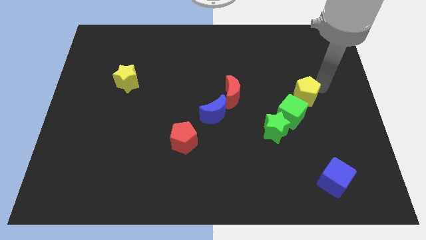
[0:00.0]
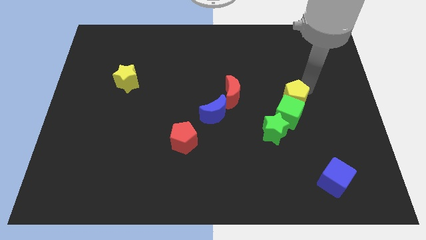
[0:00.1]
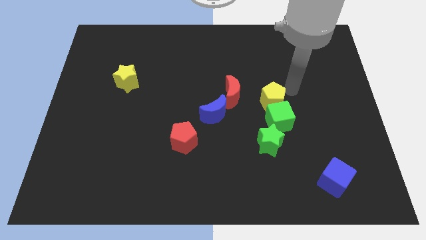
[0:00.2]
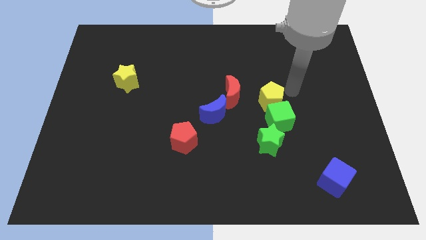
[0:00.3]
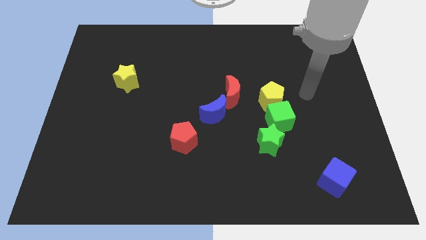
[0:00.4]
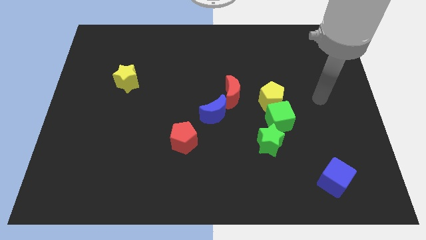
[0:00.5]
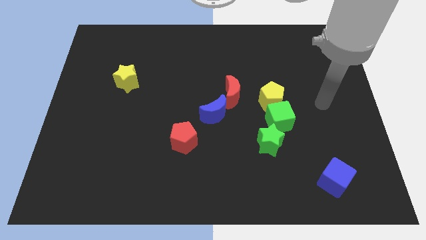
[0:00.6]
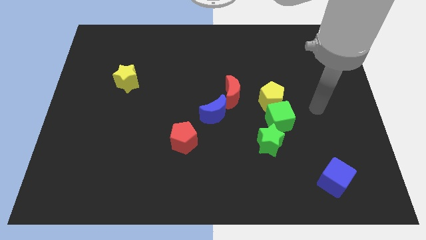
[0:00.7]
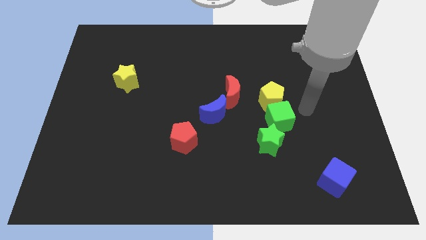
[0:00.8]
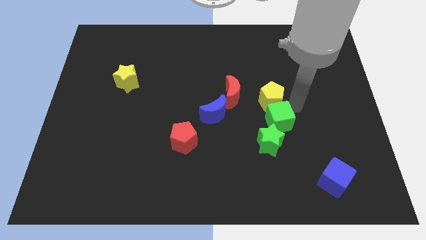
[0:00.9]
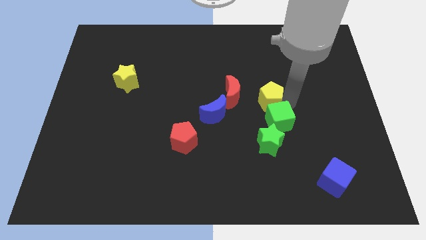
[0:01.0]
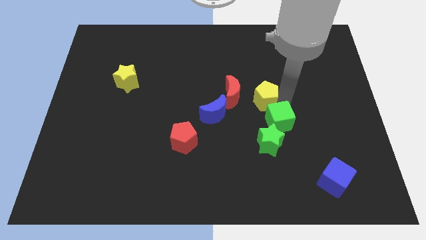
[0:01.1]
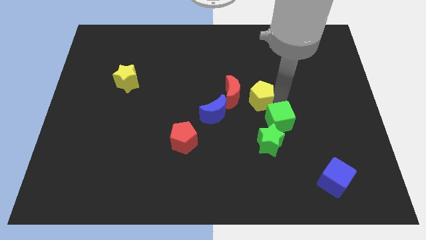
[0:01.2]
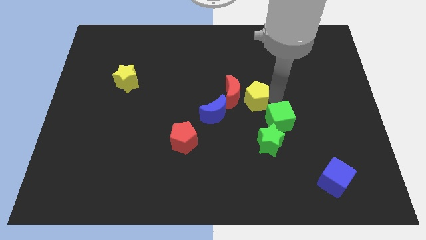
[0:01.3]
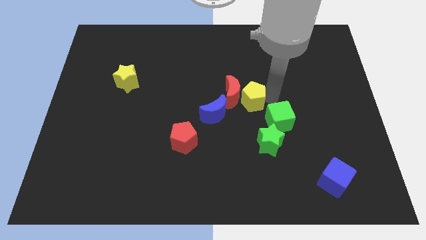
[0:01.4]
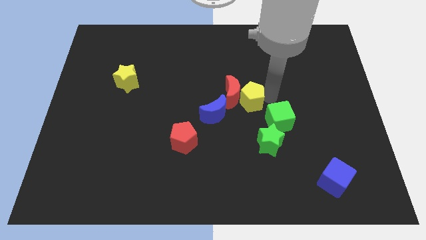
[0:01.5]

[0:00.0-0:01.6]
push the yellow pentagon to the right of the red crescent

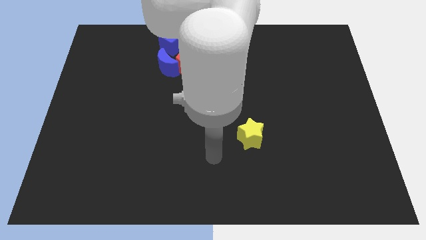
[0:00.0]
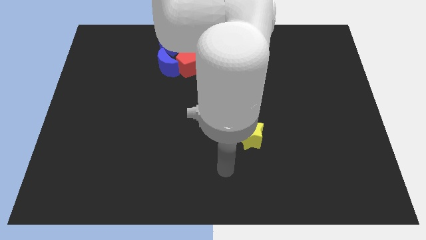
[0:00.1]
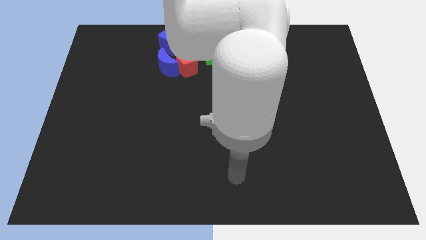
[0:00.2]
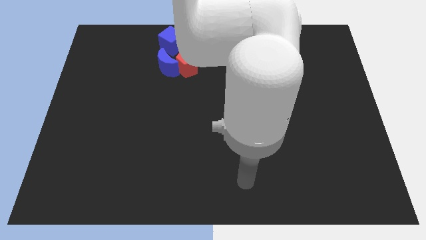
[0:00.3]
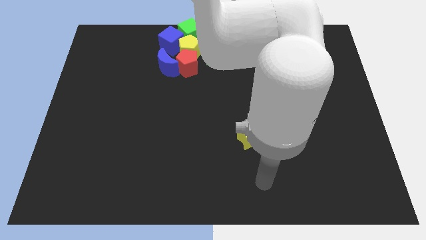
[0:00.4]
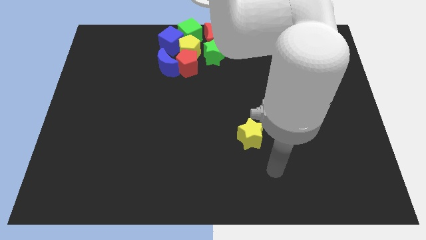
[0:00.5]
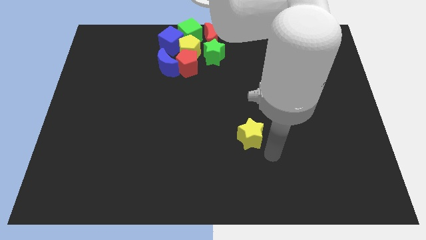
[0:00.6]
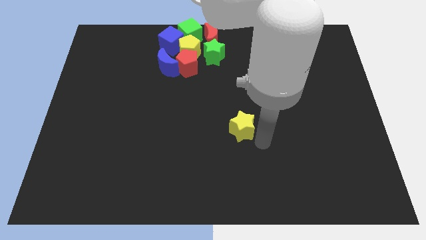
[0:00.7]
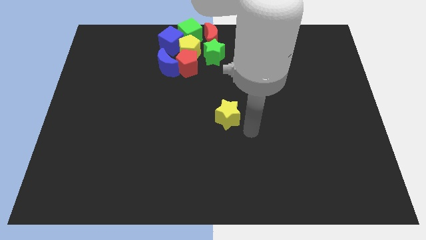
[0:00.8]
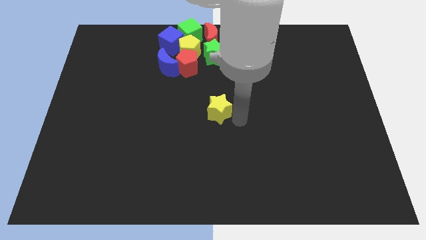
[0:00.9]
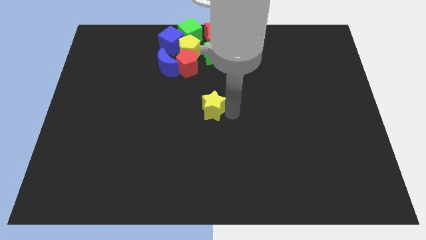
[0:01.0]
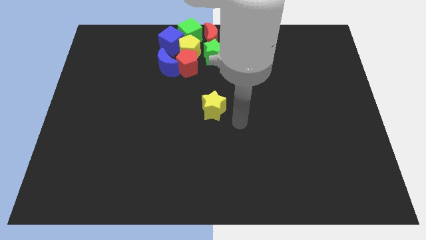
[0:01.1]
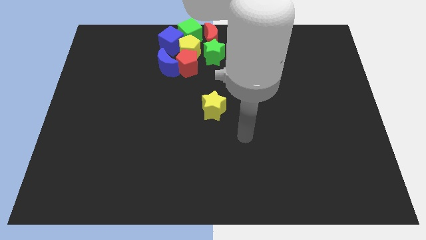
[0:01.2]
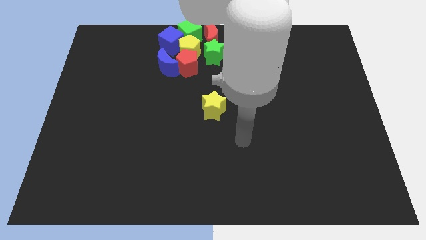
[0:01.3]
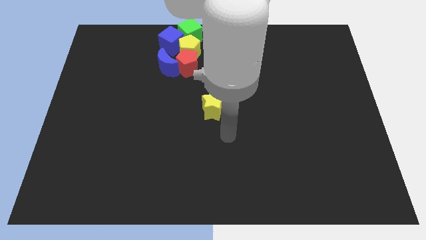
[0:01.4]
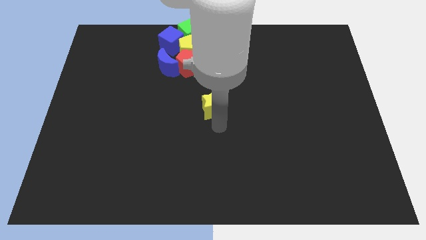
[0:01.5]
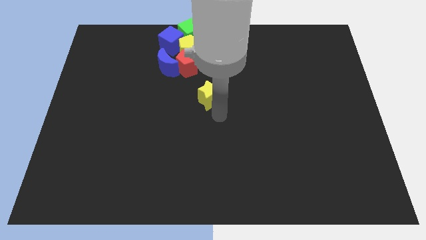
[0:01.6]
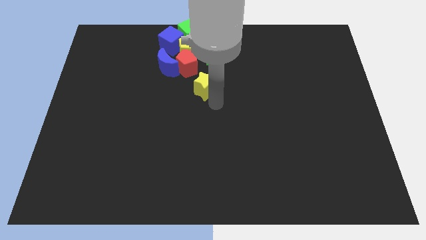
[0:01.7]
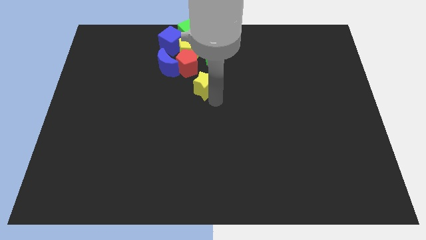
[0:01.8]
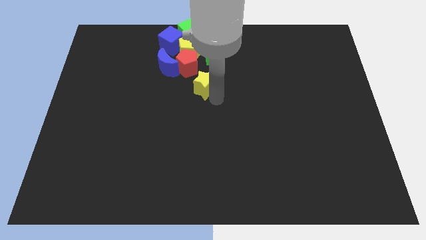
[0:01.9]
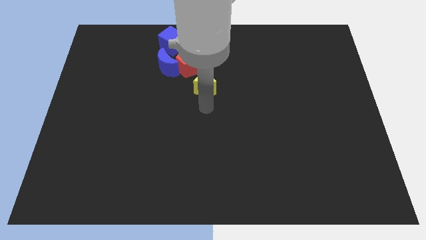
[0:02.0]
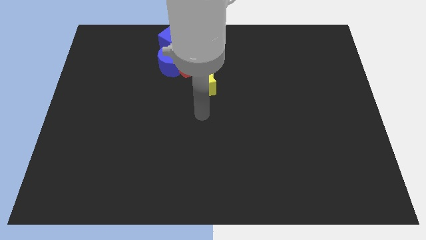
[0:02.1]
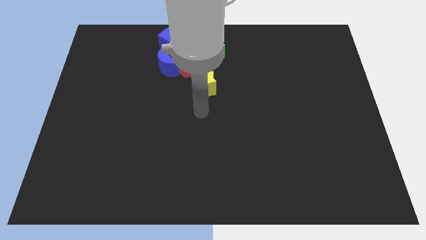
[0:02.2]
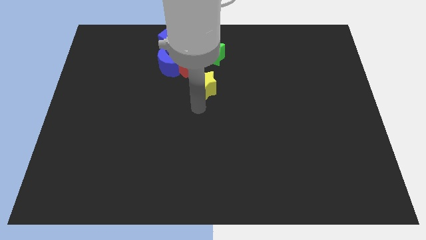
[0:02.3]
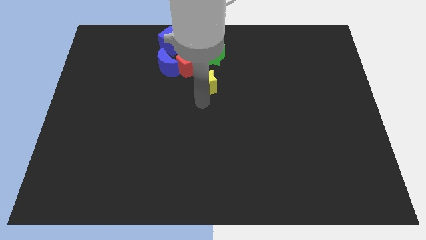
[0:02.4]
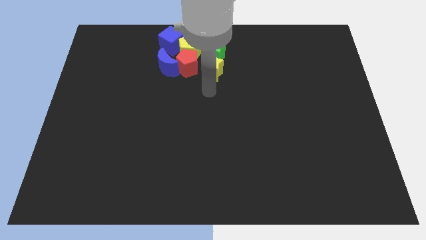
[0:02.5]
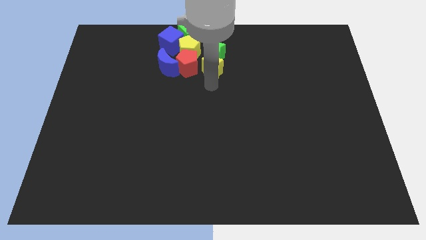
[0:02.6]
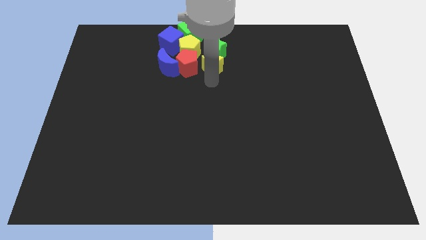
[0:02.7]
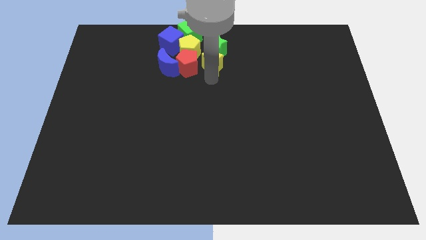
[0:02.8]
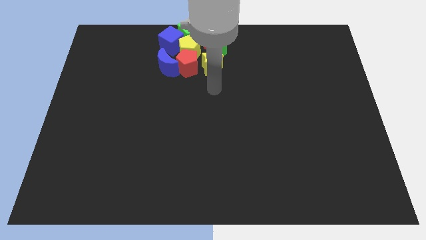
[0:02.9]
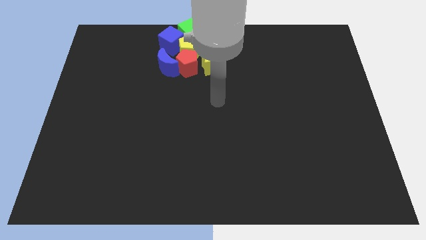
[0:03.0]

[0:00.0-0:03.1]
push the yellow star close to the green star at the top center of the board

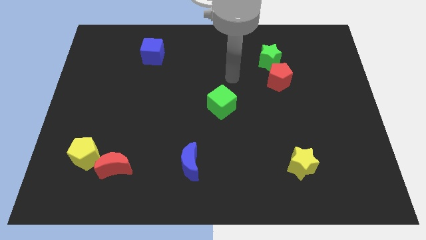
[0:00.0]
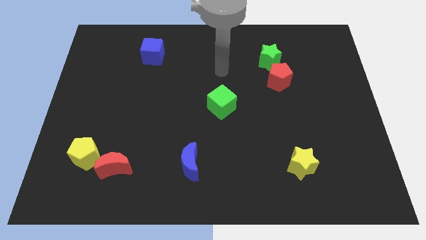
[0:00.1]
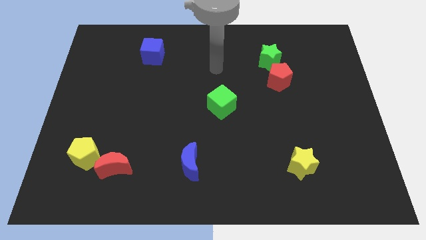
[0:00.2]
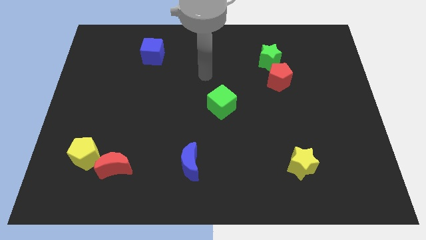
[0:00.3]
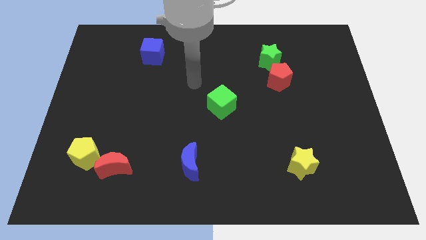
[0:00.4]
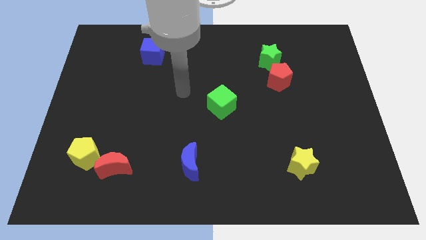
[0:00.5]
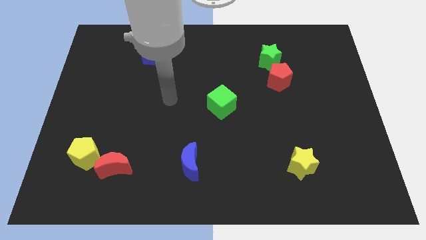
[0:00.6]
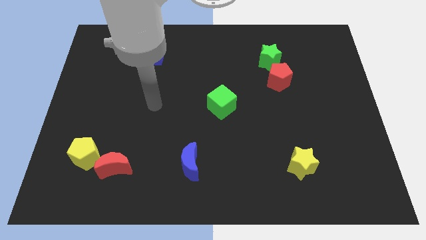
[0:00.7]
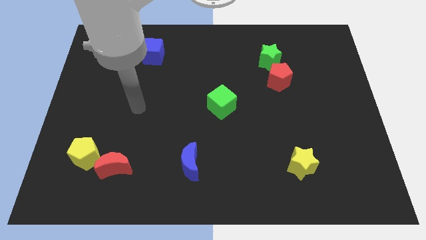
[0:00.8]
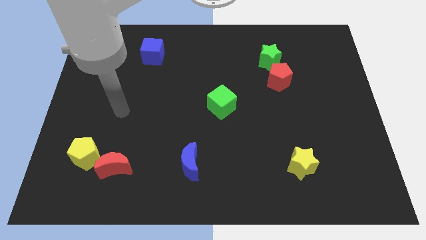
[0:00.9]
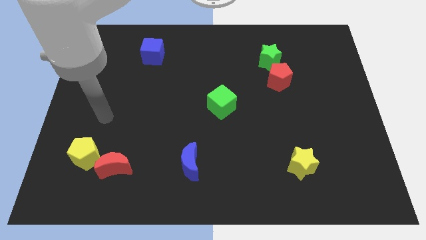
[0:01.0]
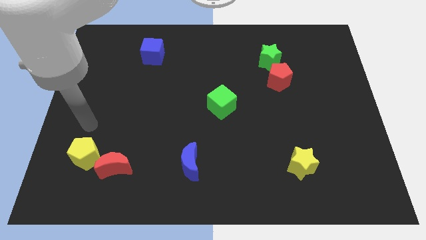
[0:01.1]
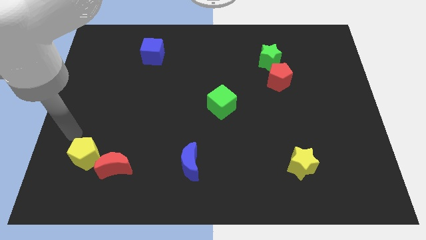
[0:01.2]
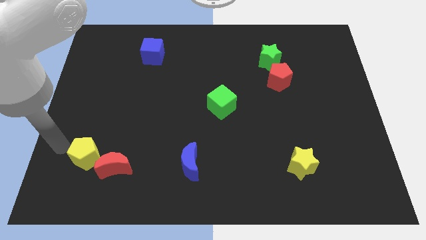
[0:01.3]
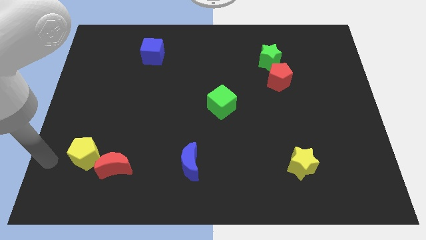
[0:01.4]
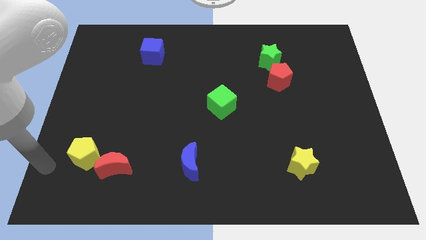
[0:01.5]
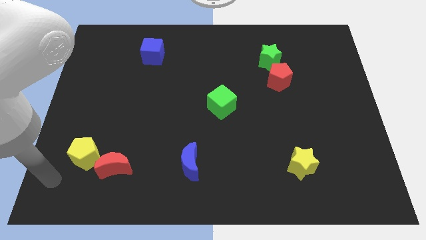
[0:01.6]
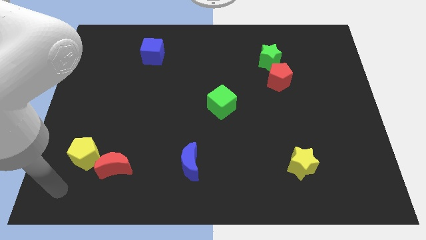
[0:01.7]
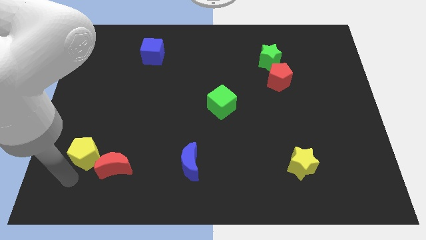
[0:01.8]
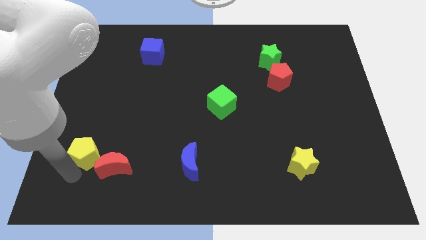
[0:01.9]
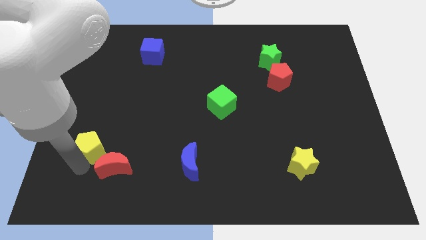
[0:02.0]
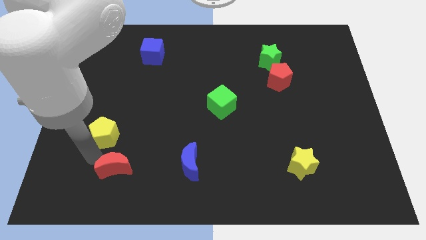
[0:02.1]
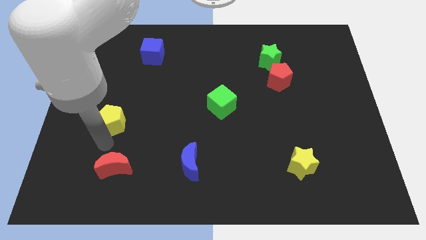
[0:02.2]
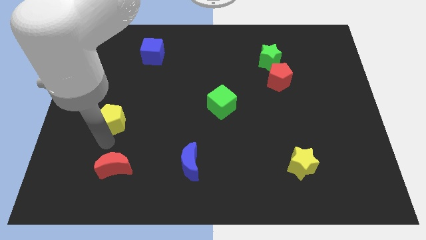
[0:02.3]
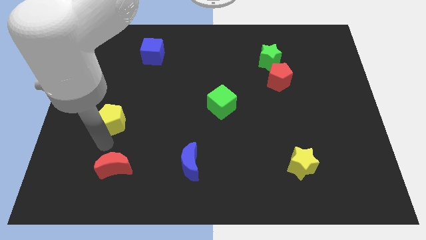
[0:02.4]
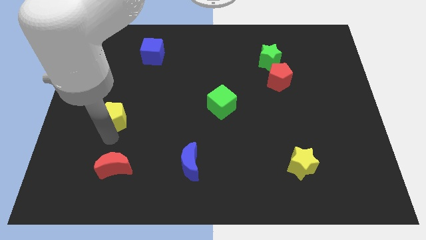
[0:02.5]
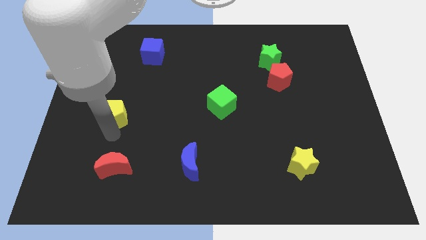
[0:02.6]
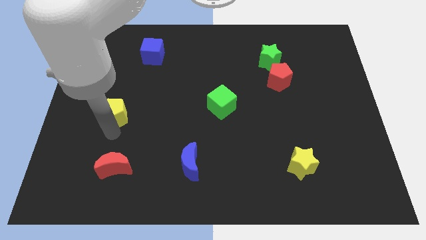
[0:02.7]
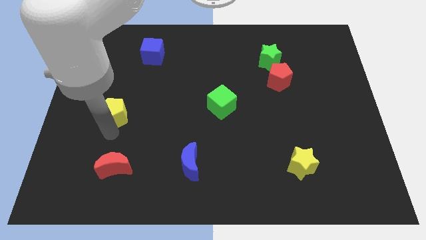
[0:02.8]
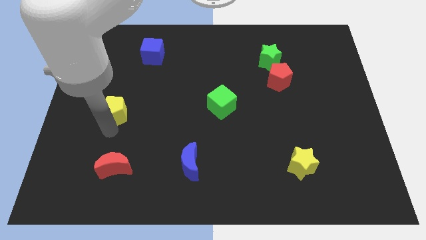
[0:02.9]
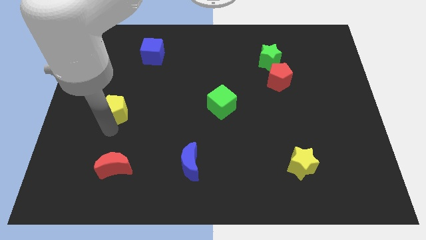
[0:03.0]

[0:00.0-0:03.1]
move the yellow pentagon away from the red crescent

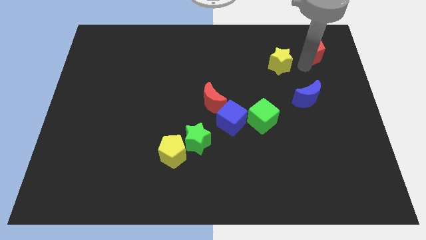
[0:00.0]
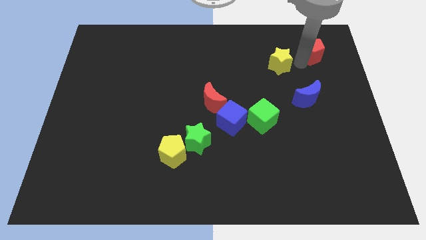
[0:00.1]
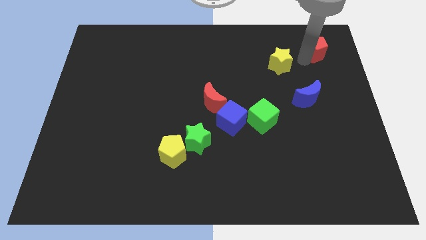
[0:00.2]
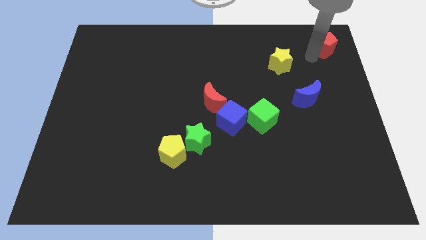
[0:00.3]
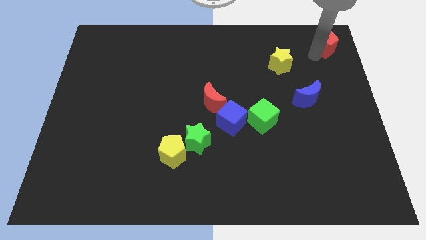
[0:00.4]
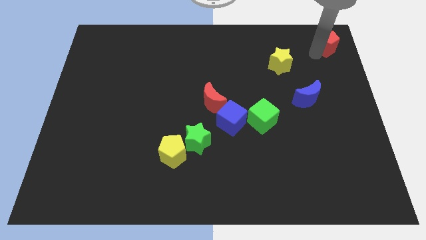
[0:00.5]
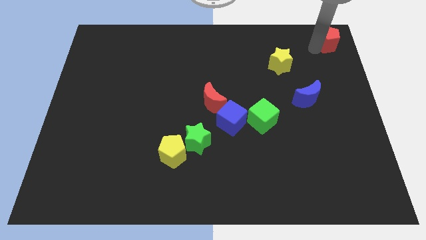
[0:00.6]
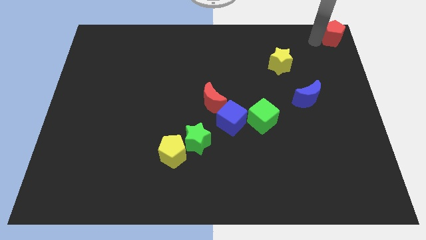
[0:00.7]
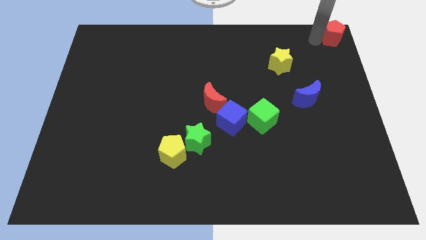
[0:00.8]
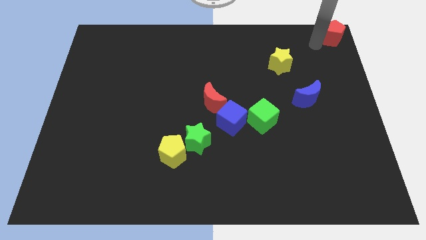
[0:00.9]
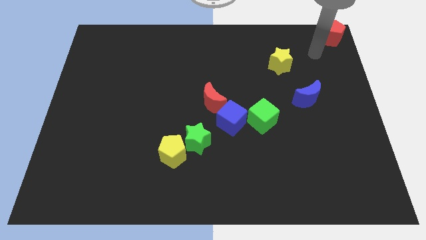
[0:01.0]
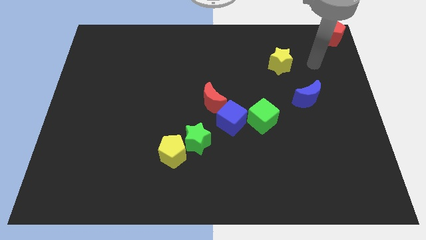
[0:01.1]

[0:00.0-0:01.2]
slide the red pentagon to the top right corner of the board
